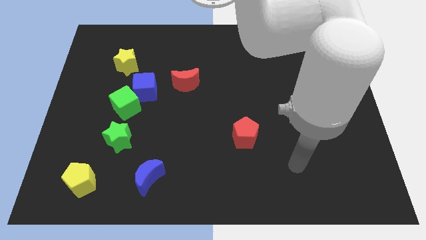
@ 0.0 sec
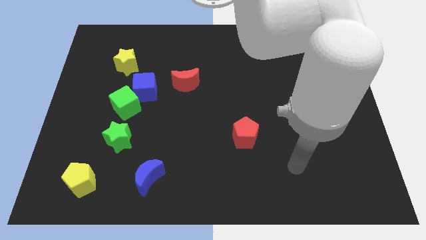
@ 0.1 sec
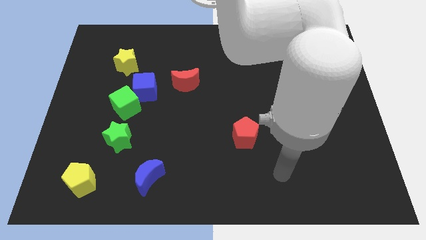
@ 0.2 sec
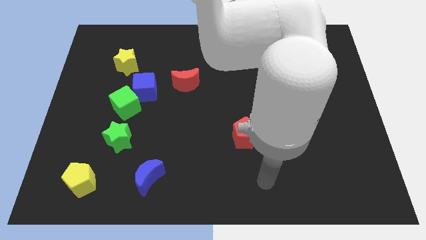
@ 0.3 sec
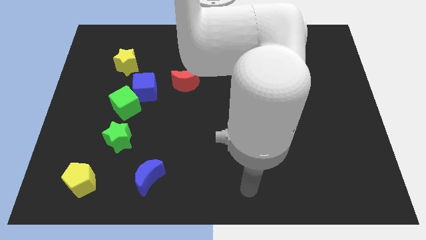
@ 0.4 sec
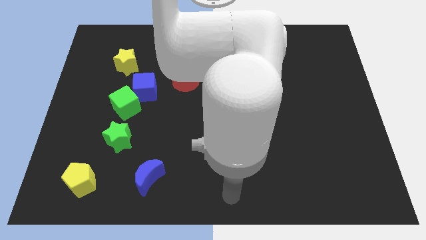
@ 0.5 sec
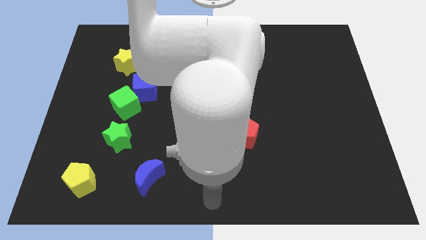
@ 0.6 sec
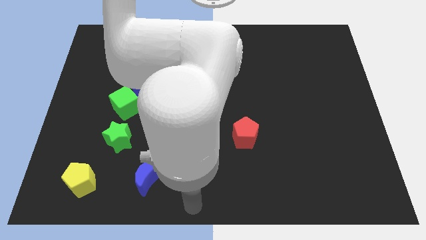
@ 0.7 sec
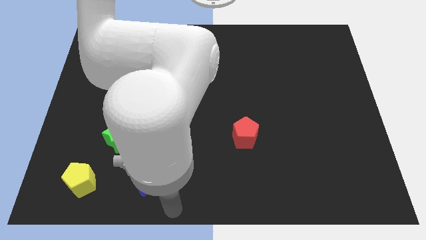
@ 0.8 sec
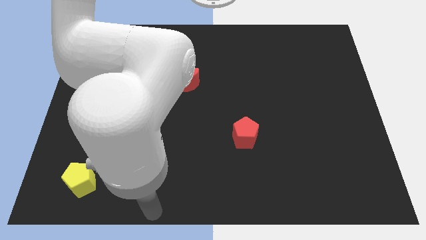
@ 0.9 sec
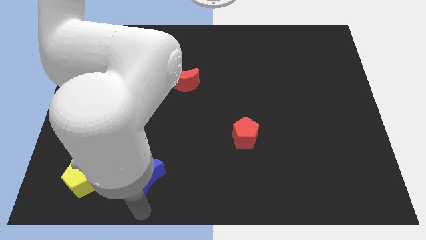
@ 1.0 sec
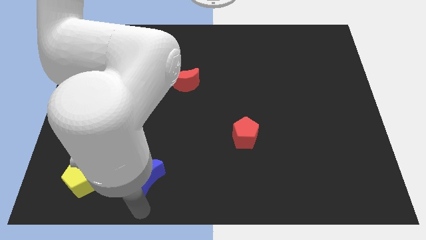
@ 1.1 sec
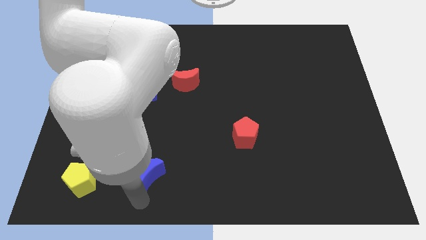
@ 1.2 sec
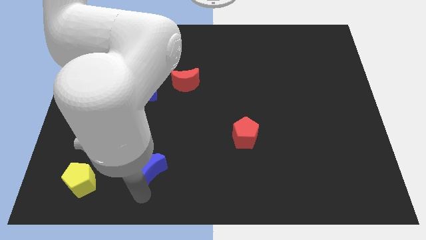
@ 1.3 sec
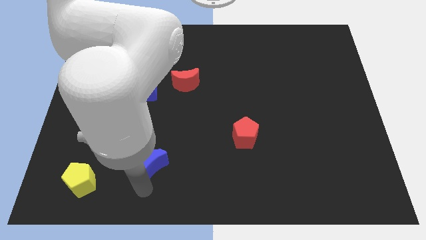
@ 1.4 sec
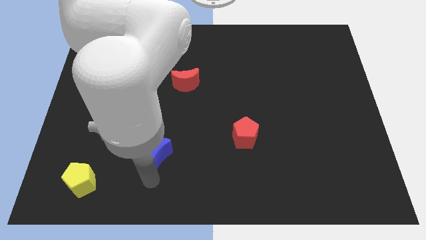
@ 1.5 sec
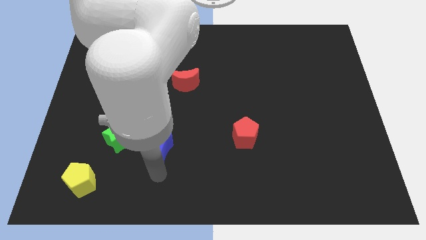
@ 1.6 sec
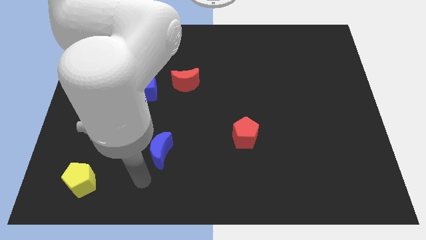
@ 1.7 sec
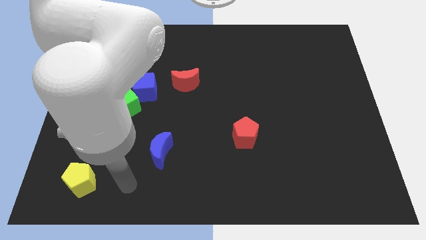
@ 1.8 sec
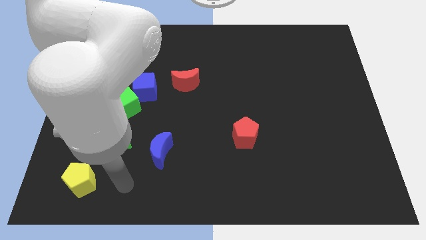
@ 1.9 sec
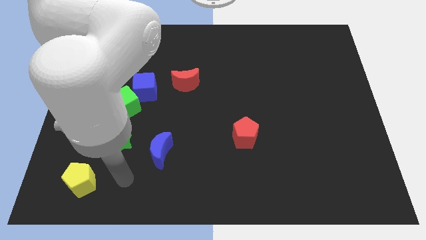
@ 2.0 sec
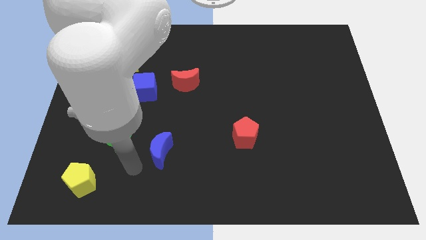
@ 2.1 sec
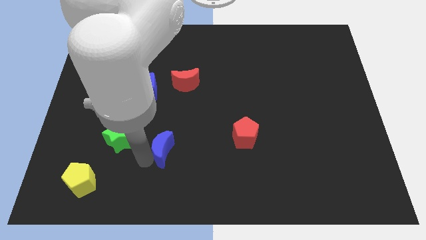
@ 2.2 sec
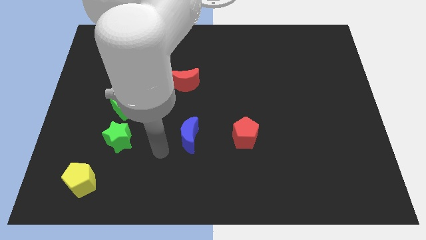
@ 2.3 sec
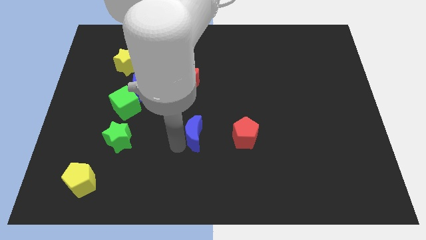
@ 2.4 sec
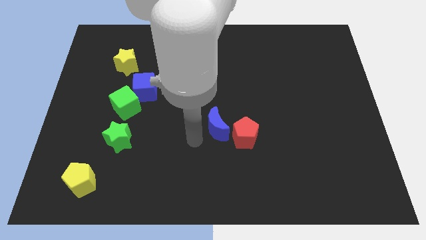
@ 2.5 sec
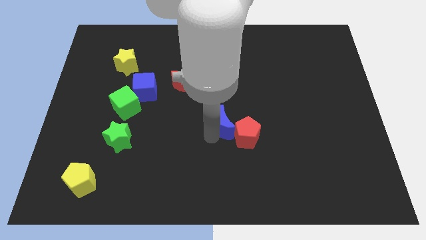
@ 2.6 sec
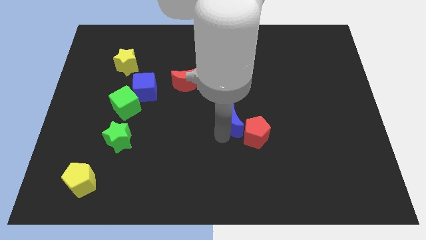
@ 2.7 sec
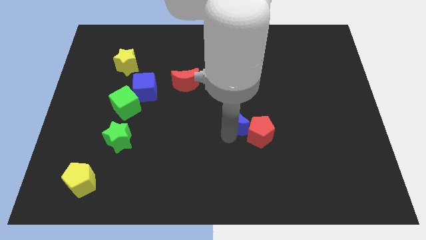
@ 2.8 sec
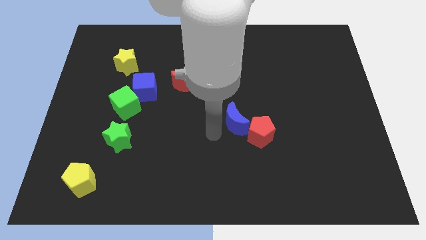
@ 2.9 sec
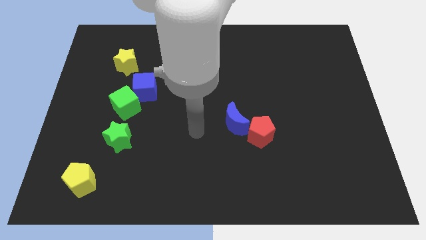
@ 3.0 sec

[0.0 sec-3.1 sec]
push the blue crescent towards the red pentagon

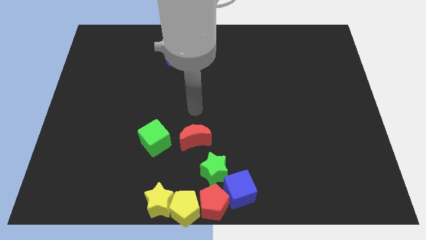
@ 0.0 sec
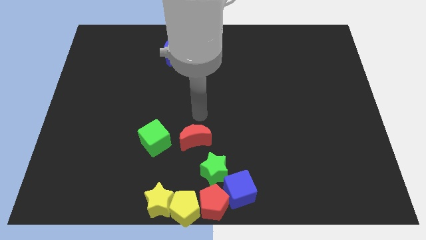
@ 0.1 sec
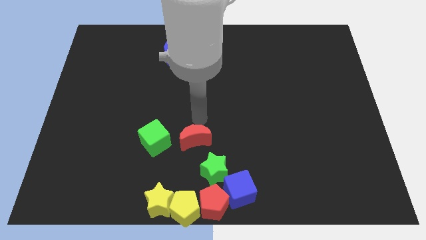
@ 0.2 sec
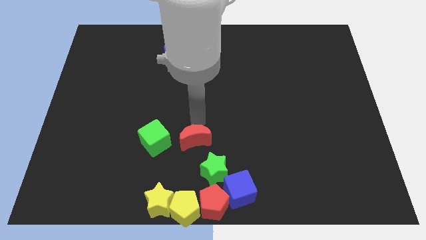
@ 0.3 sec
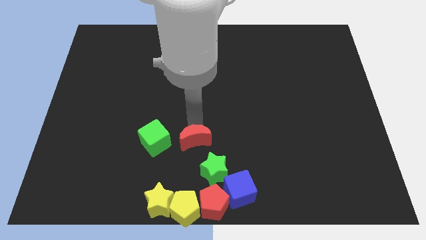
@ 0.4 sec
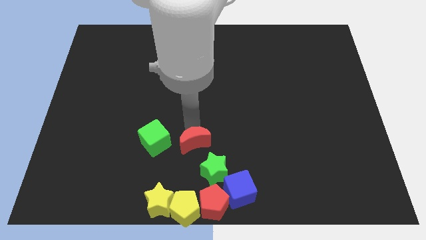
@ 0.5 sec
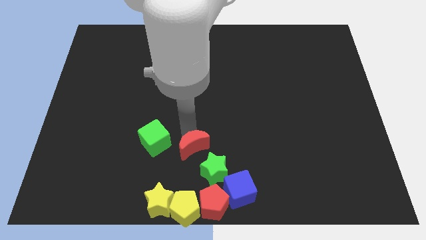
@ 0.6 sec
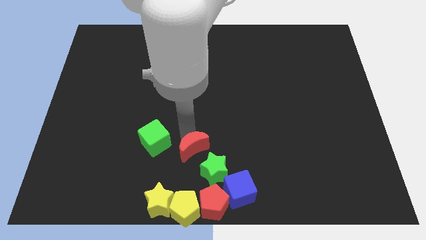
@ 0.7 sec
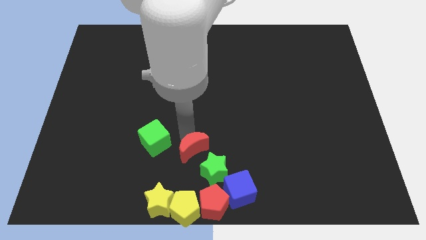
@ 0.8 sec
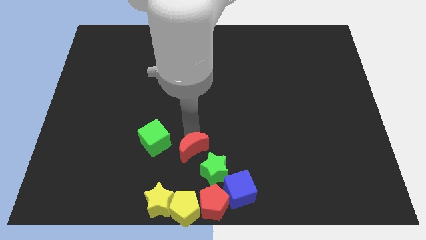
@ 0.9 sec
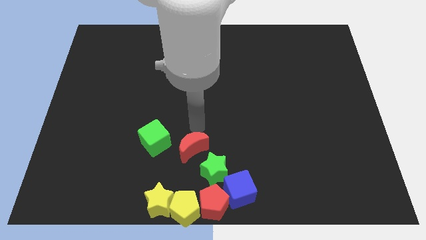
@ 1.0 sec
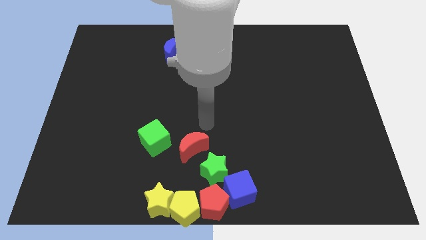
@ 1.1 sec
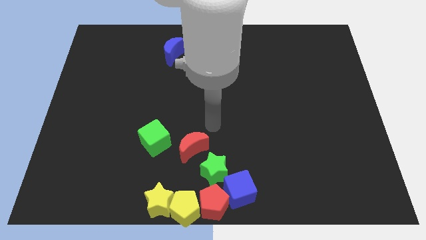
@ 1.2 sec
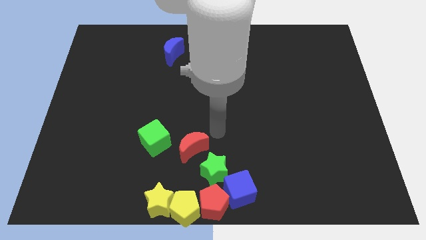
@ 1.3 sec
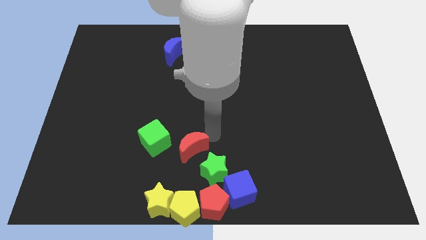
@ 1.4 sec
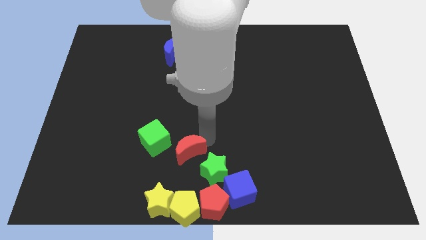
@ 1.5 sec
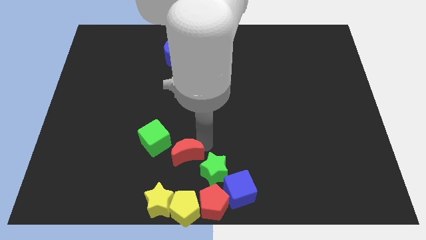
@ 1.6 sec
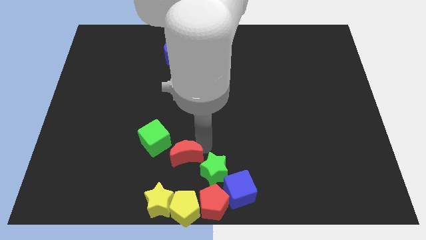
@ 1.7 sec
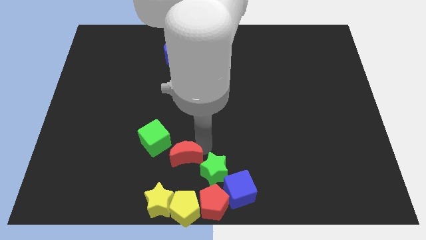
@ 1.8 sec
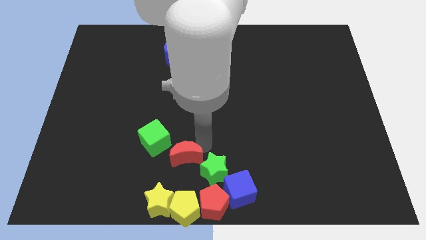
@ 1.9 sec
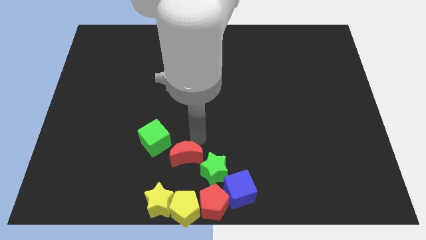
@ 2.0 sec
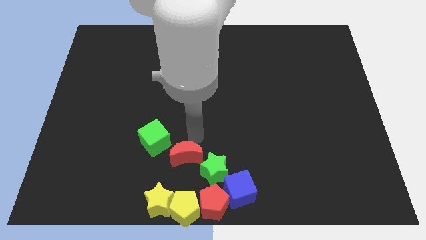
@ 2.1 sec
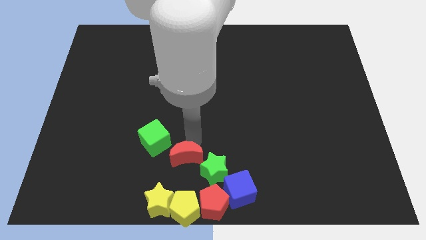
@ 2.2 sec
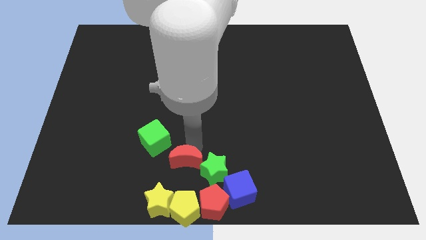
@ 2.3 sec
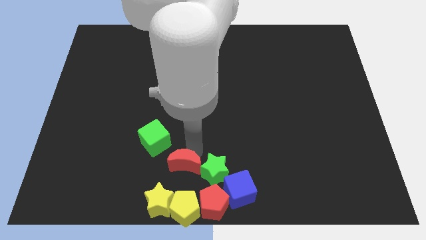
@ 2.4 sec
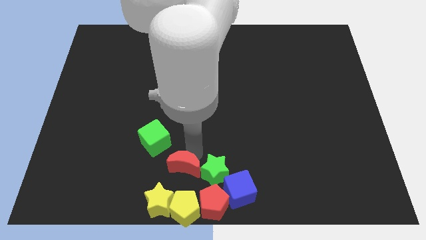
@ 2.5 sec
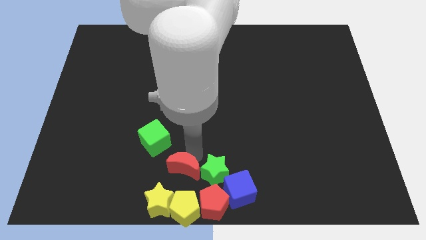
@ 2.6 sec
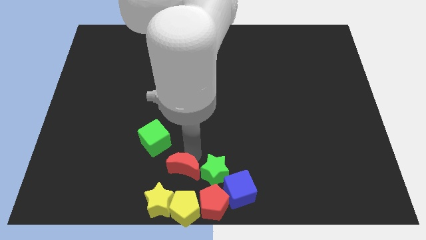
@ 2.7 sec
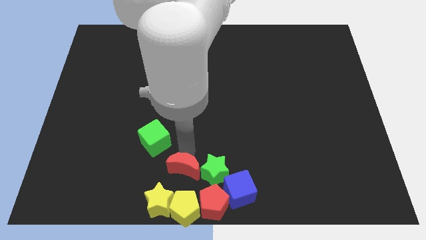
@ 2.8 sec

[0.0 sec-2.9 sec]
place red crescent in between the green cube and green star

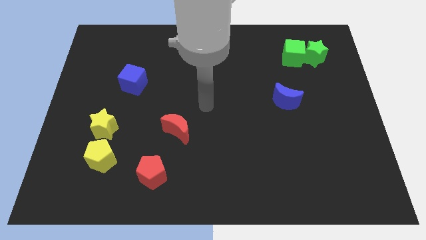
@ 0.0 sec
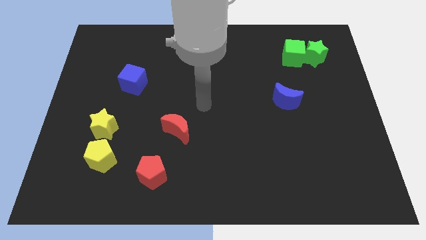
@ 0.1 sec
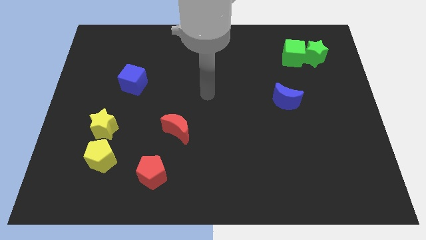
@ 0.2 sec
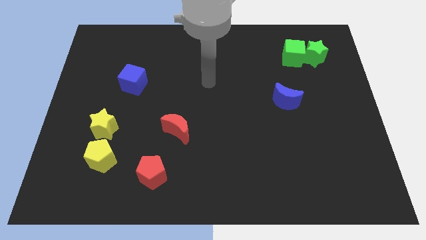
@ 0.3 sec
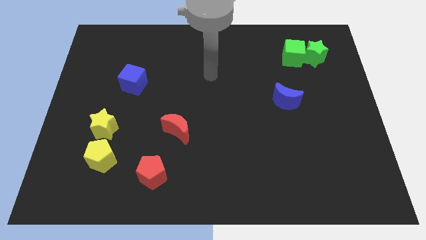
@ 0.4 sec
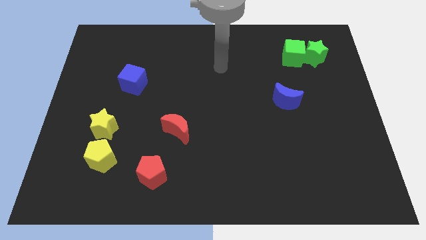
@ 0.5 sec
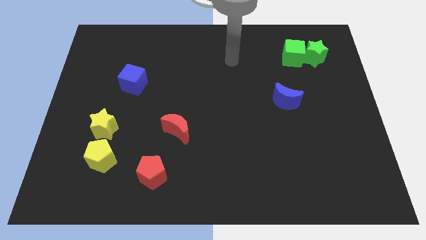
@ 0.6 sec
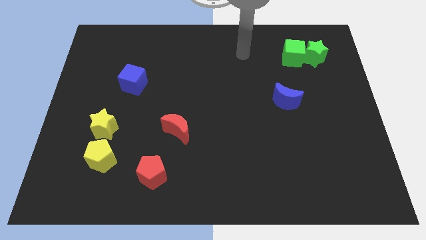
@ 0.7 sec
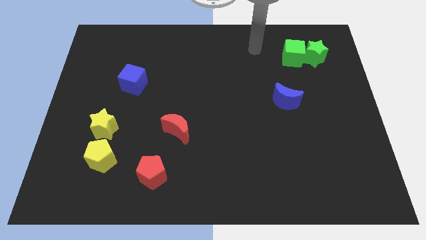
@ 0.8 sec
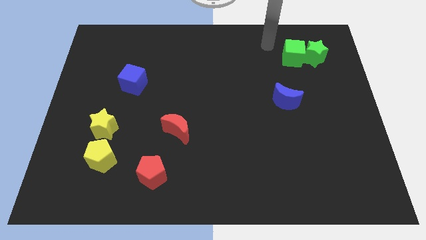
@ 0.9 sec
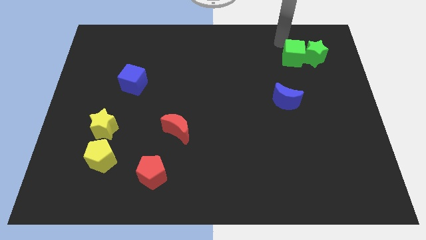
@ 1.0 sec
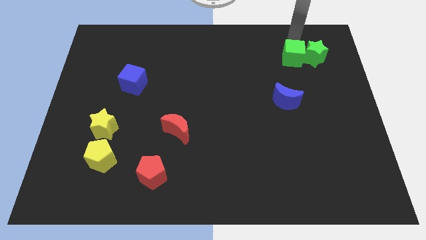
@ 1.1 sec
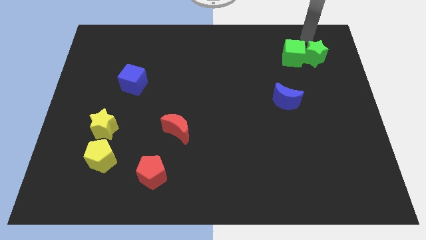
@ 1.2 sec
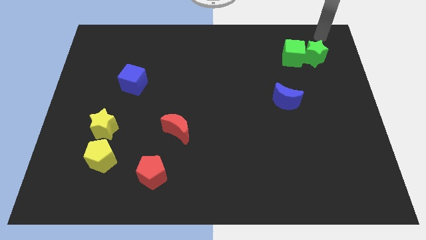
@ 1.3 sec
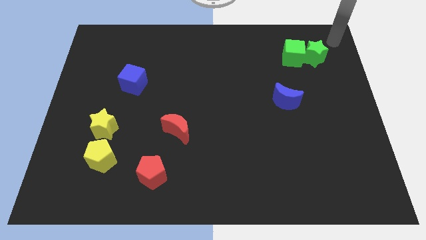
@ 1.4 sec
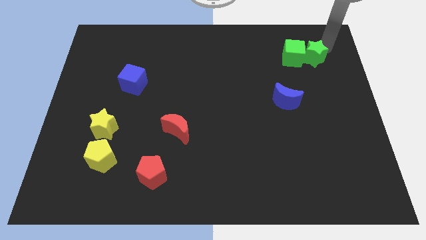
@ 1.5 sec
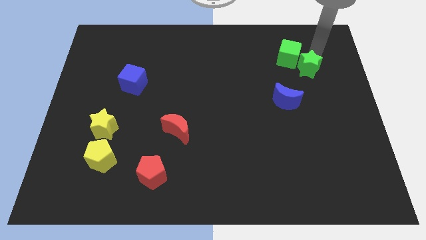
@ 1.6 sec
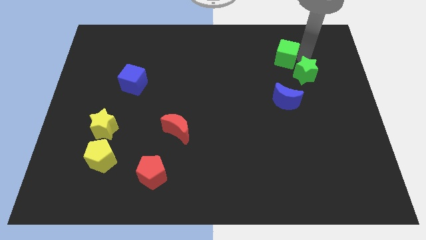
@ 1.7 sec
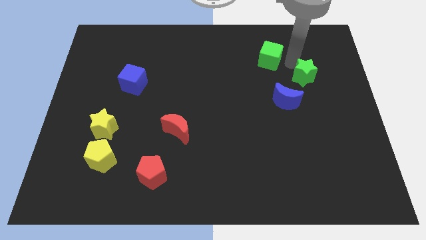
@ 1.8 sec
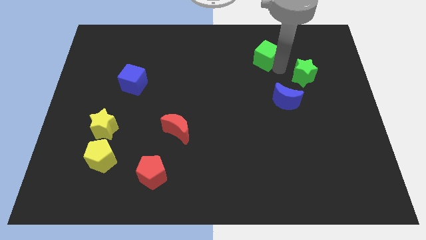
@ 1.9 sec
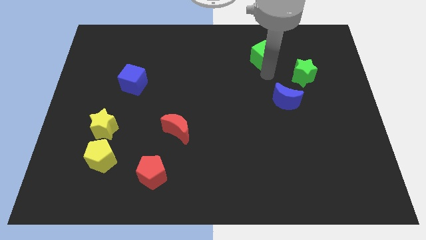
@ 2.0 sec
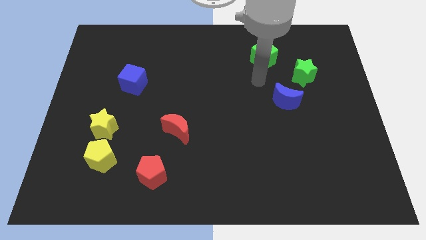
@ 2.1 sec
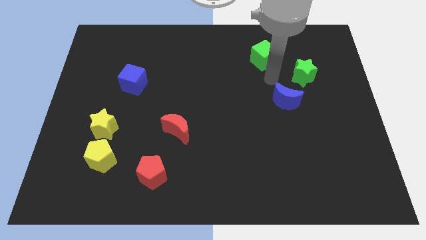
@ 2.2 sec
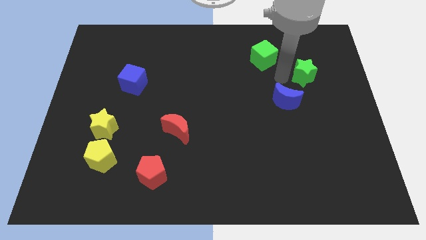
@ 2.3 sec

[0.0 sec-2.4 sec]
separate the green blocks

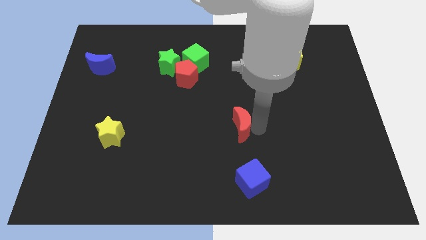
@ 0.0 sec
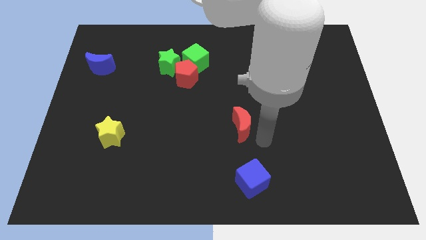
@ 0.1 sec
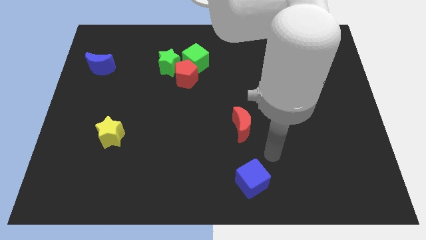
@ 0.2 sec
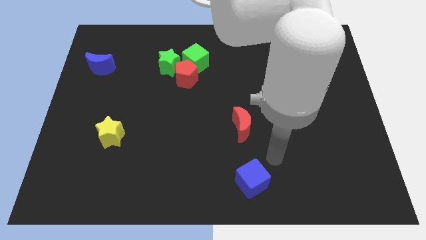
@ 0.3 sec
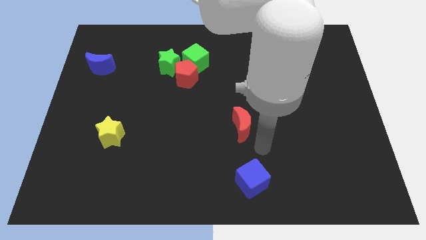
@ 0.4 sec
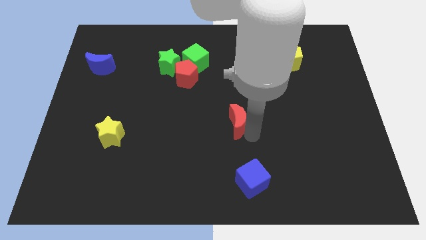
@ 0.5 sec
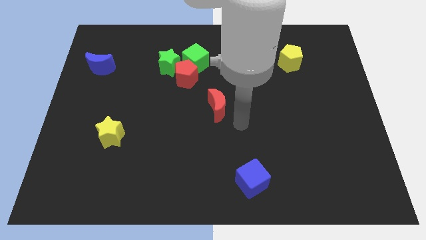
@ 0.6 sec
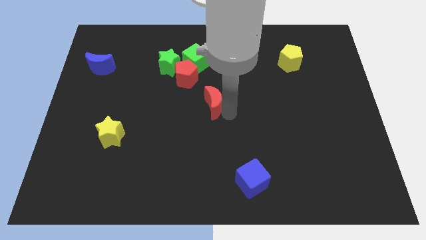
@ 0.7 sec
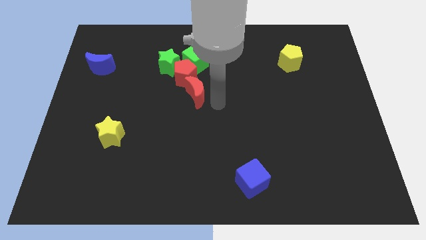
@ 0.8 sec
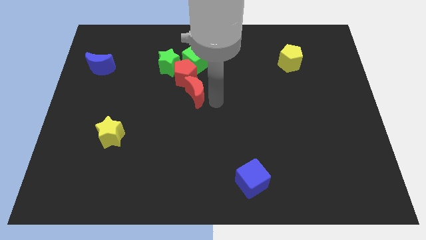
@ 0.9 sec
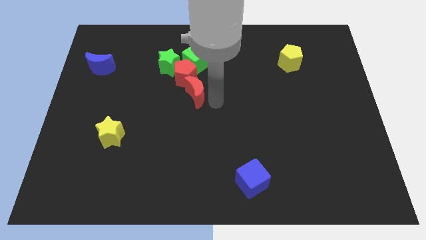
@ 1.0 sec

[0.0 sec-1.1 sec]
push red moon in to red pentagon
